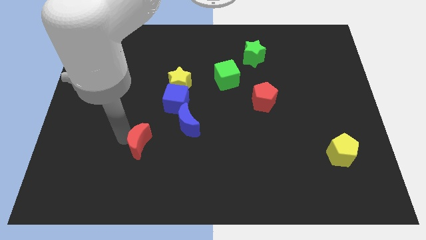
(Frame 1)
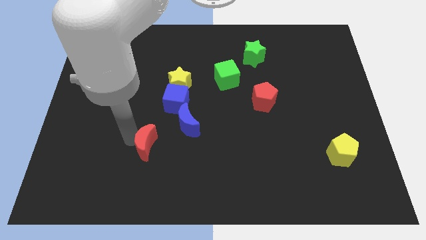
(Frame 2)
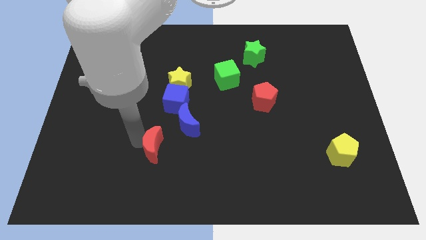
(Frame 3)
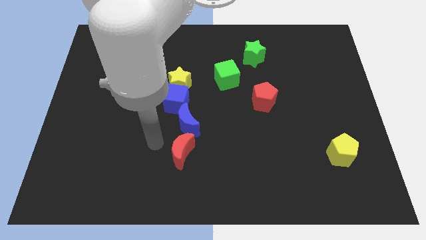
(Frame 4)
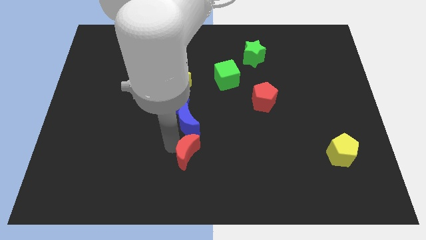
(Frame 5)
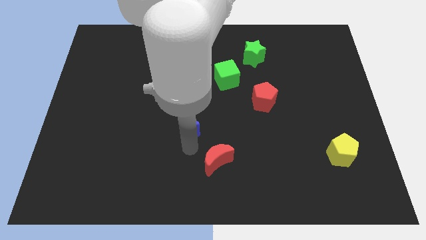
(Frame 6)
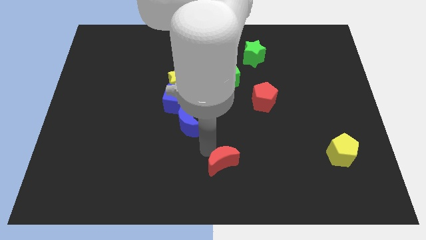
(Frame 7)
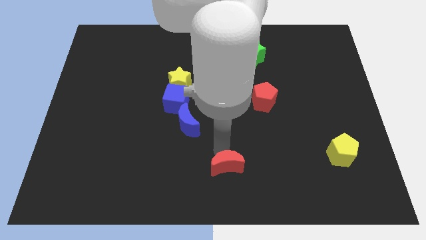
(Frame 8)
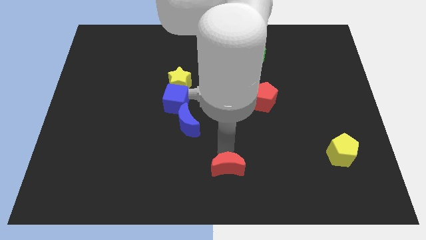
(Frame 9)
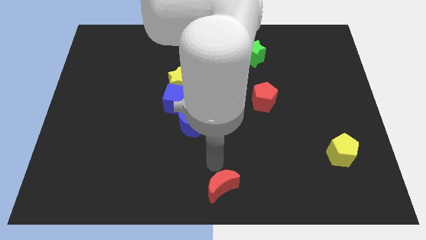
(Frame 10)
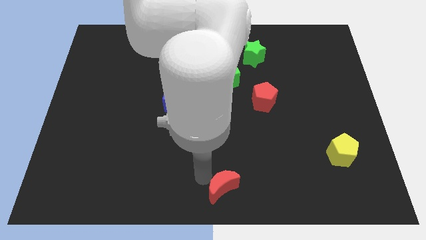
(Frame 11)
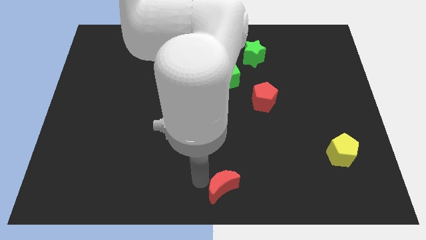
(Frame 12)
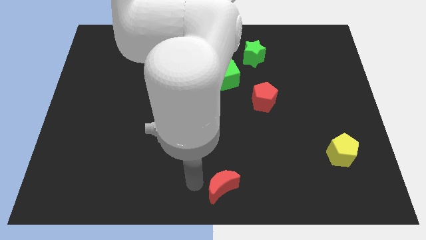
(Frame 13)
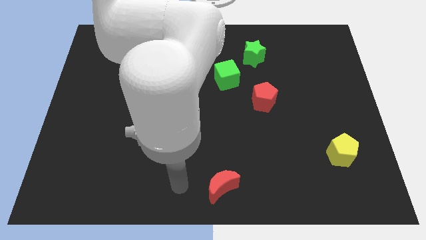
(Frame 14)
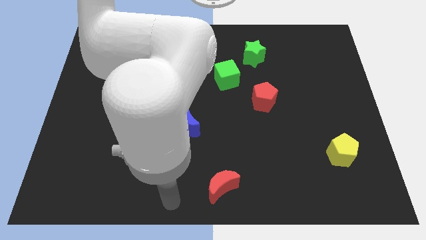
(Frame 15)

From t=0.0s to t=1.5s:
move the red crescent to the bottom of the board

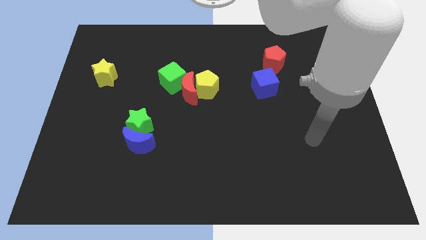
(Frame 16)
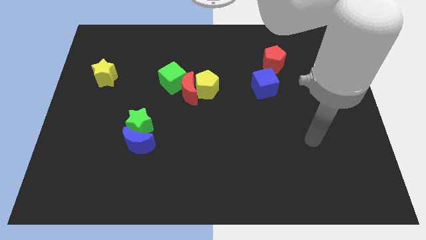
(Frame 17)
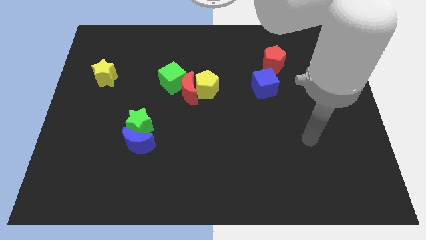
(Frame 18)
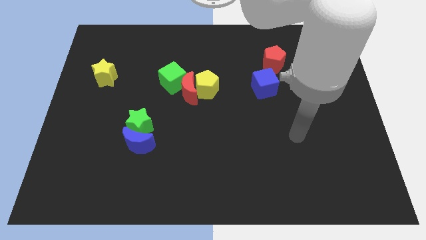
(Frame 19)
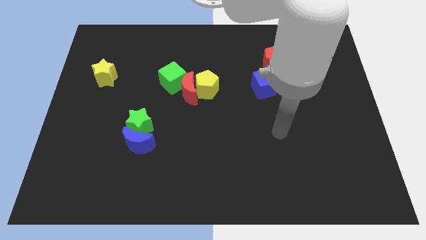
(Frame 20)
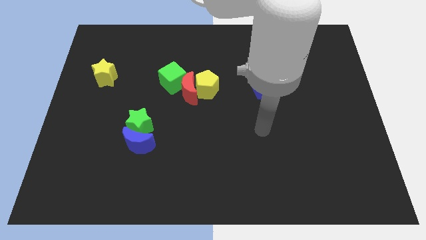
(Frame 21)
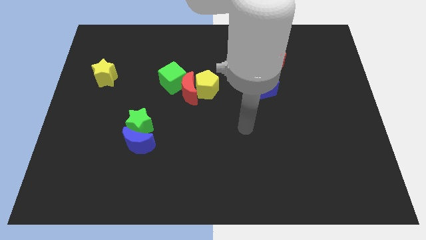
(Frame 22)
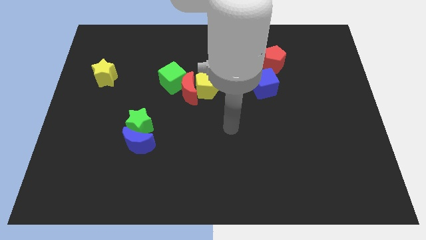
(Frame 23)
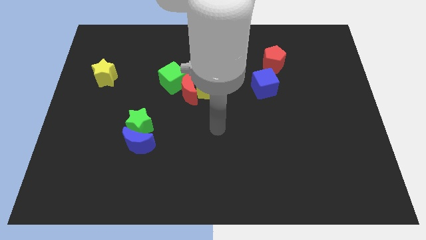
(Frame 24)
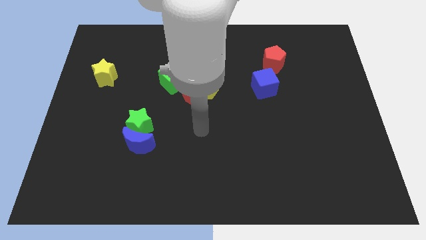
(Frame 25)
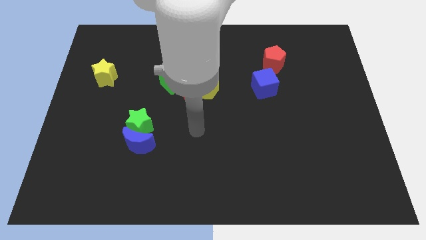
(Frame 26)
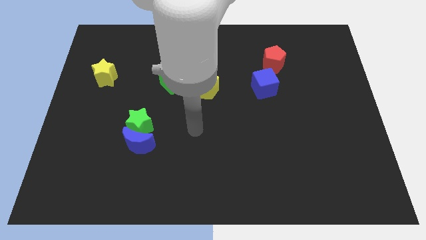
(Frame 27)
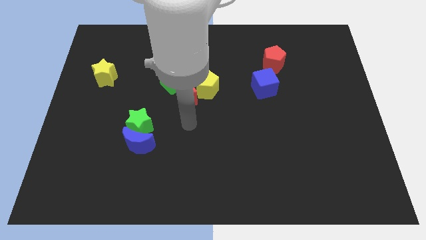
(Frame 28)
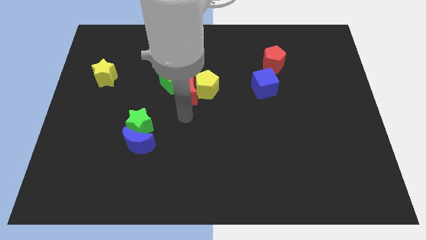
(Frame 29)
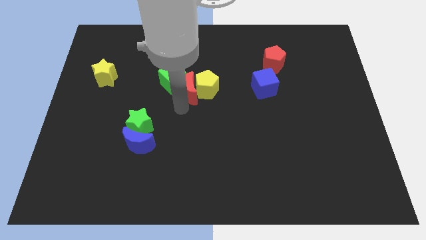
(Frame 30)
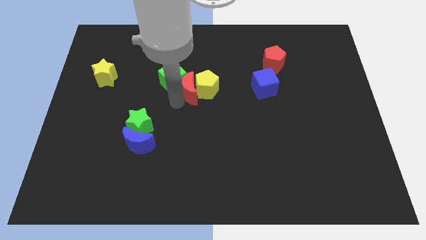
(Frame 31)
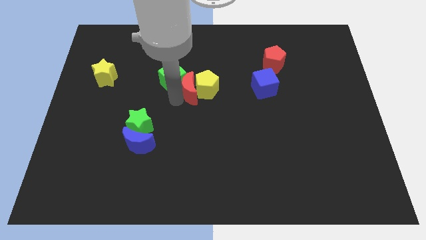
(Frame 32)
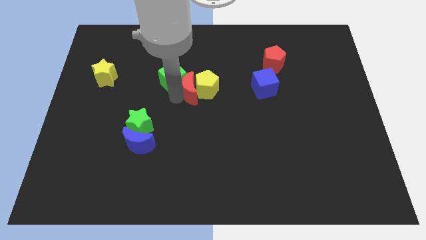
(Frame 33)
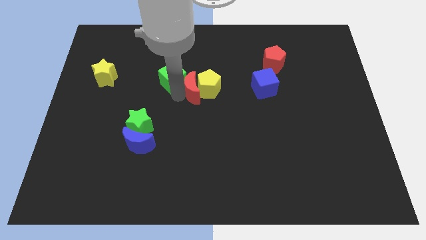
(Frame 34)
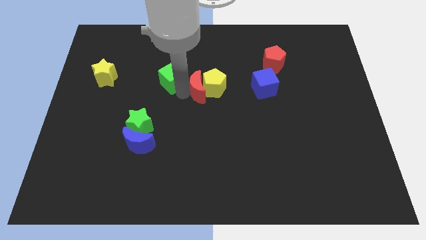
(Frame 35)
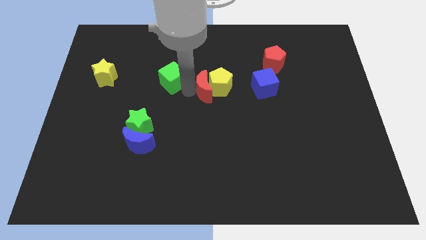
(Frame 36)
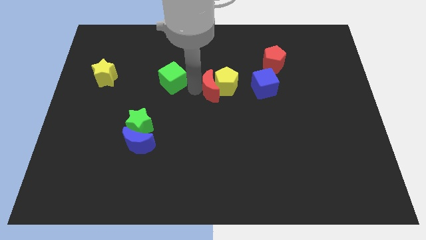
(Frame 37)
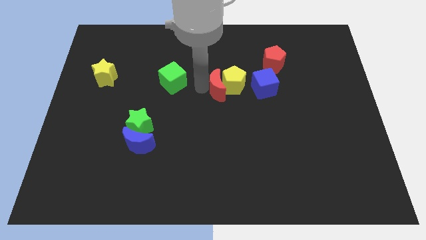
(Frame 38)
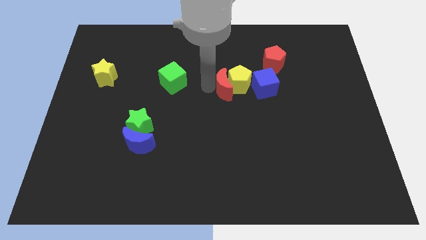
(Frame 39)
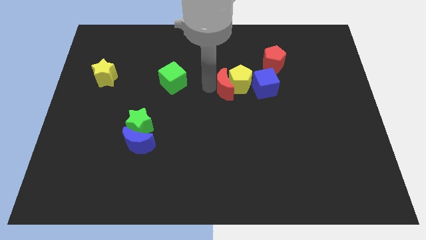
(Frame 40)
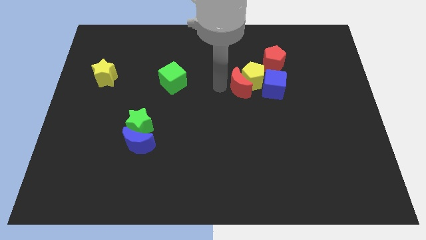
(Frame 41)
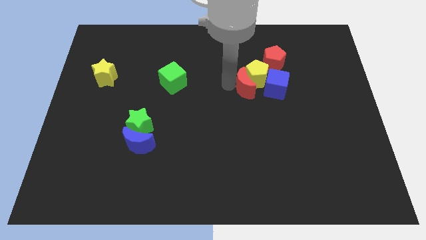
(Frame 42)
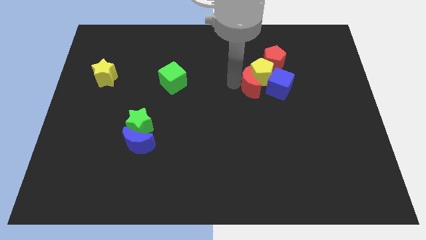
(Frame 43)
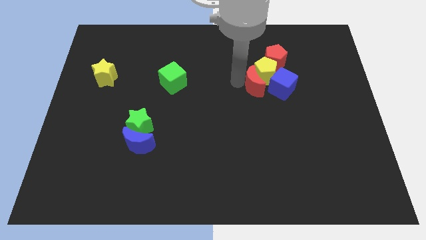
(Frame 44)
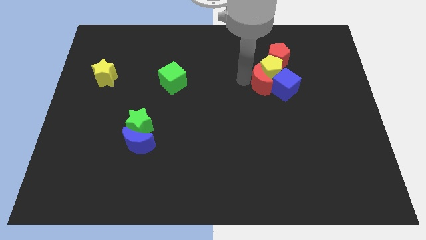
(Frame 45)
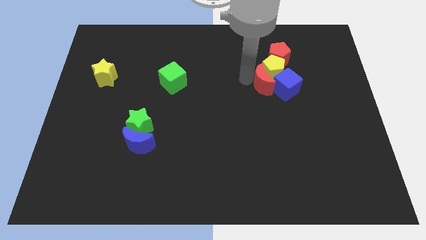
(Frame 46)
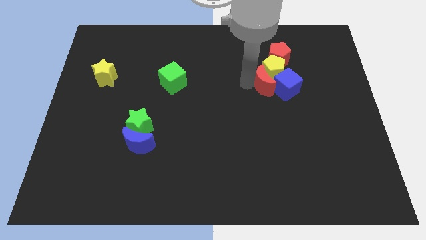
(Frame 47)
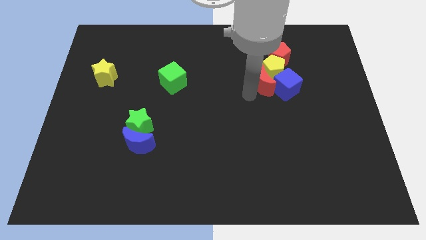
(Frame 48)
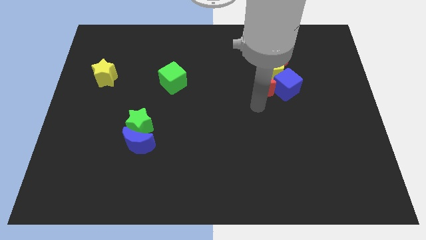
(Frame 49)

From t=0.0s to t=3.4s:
separate yellow pentagon and the red moon from the green cube

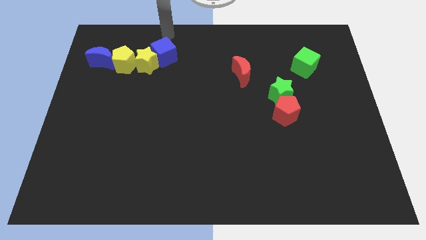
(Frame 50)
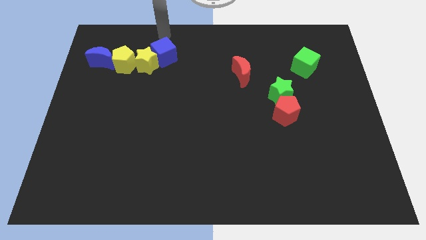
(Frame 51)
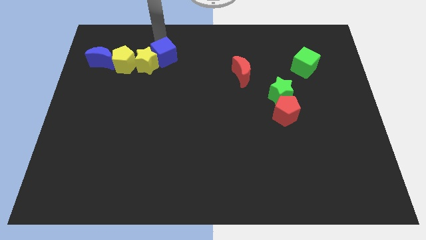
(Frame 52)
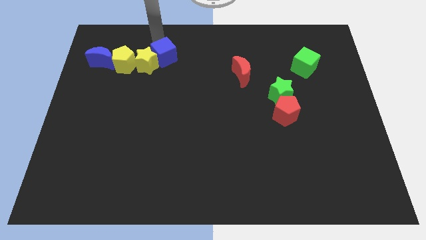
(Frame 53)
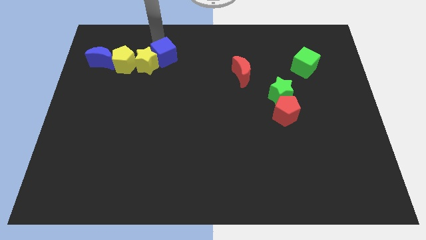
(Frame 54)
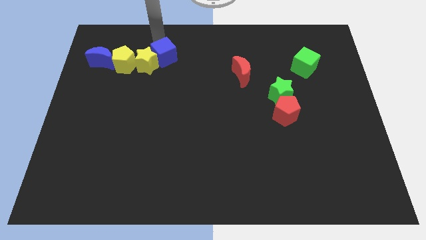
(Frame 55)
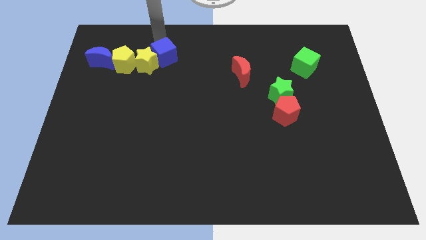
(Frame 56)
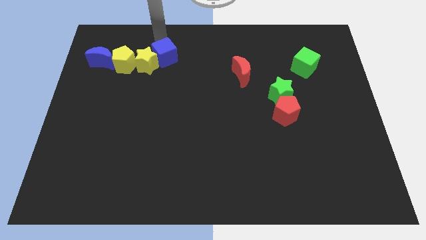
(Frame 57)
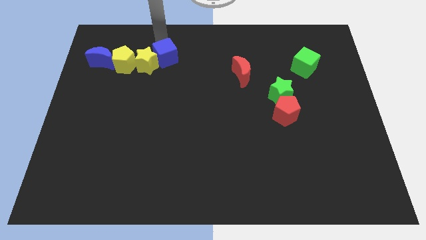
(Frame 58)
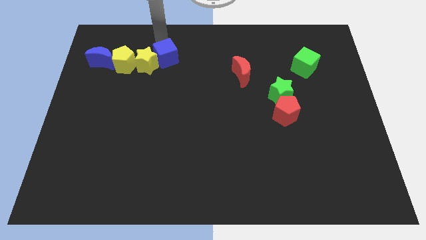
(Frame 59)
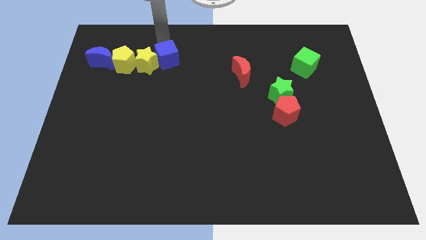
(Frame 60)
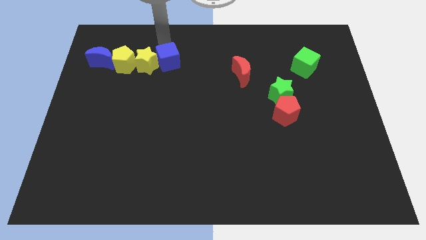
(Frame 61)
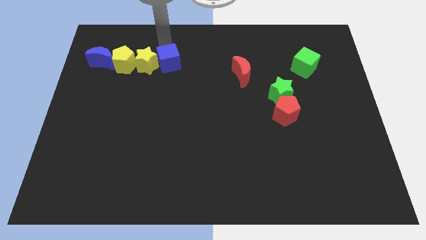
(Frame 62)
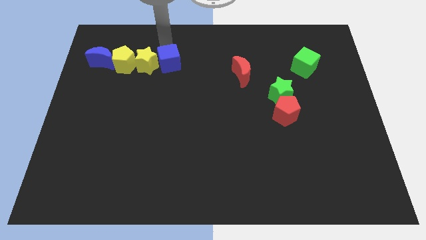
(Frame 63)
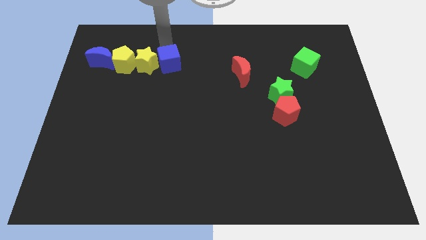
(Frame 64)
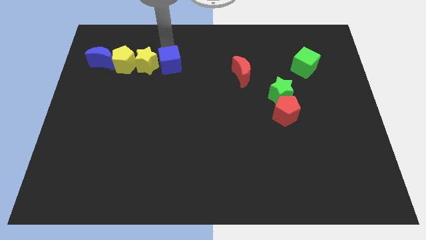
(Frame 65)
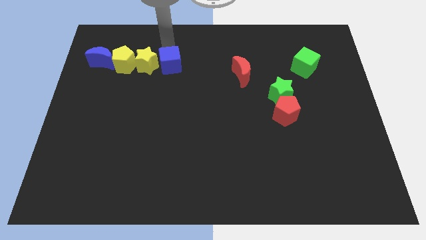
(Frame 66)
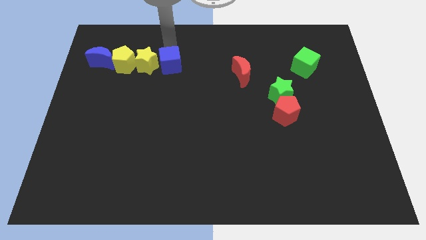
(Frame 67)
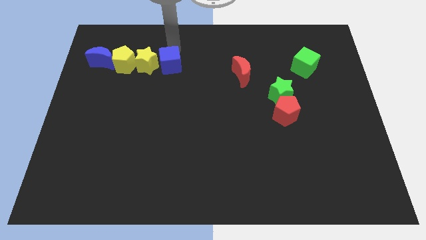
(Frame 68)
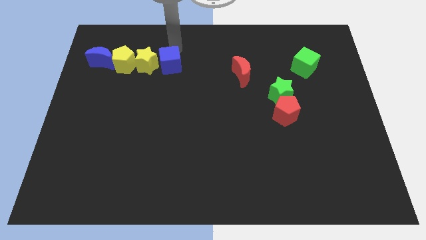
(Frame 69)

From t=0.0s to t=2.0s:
push the blue cube to the right of the yellow star

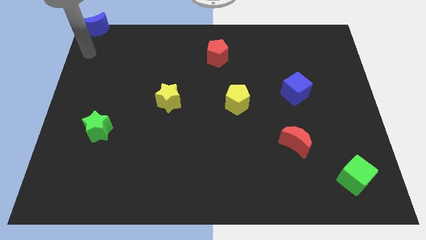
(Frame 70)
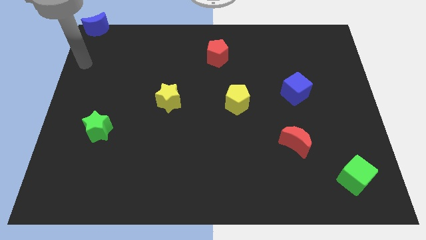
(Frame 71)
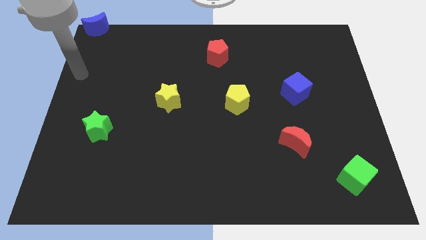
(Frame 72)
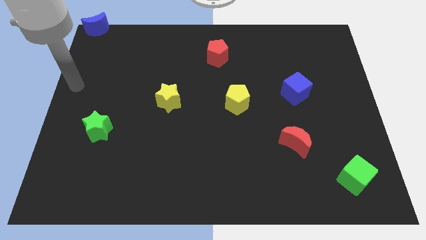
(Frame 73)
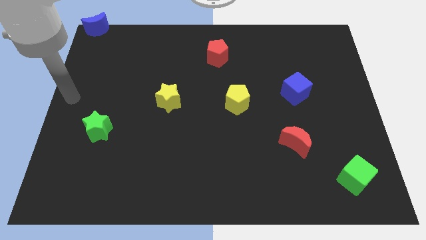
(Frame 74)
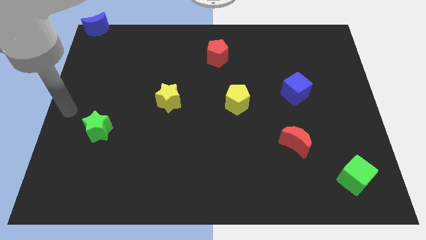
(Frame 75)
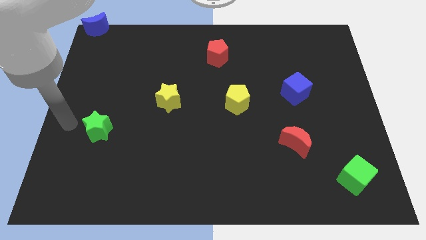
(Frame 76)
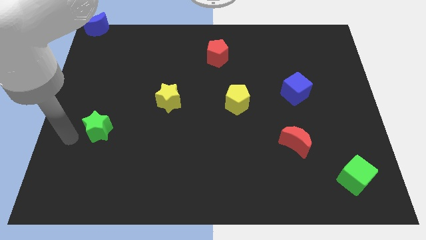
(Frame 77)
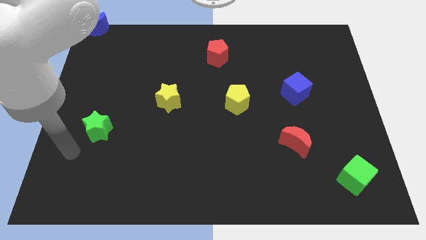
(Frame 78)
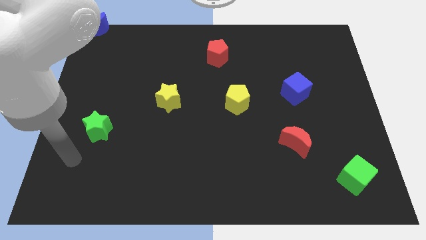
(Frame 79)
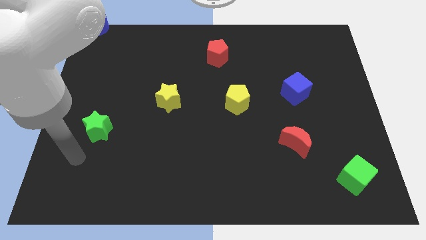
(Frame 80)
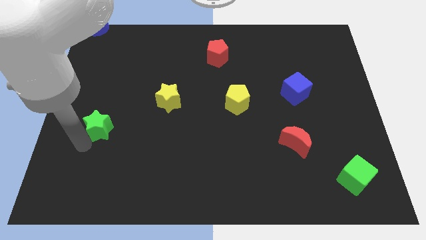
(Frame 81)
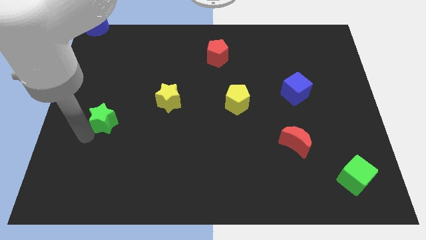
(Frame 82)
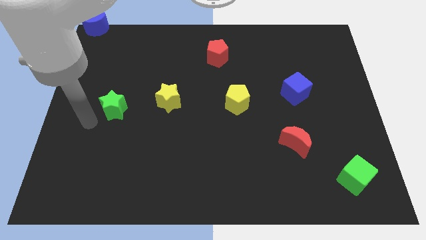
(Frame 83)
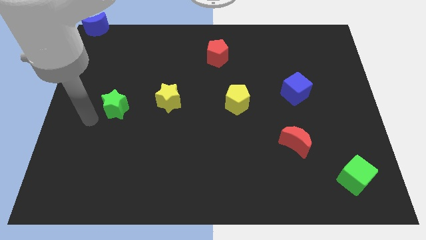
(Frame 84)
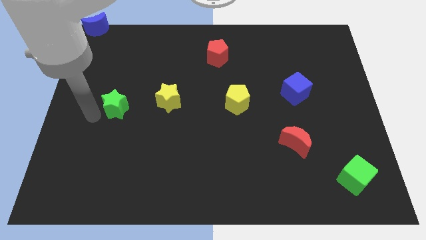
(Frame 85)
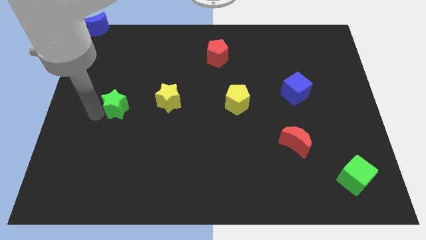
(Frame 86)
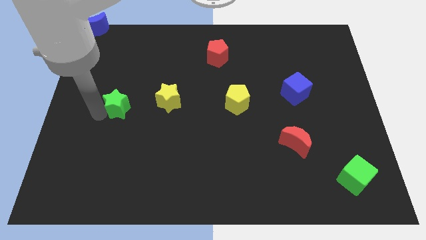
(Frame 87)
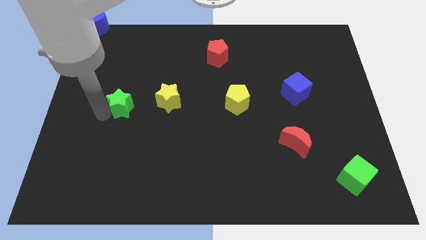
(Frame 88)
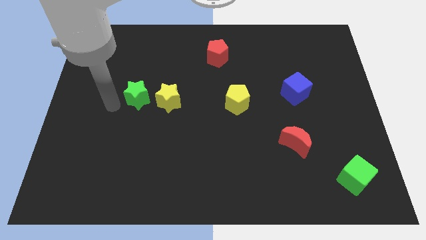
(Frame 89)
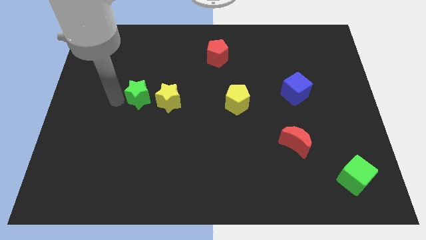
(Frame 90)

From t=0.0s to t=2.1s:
move the green star to the left of yellow star

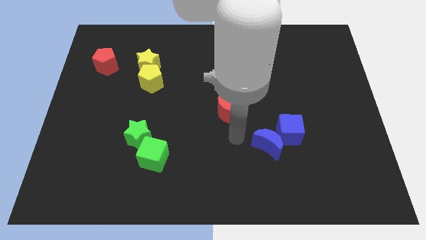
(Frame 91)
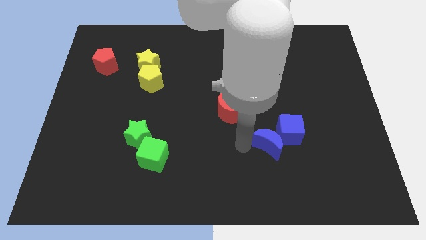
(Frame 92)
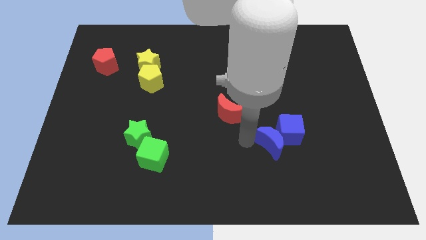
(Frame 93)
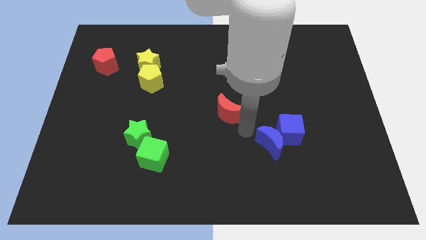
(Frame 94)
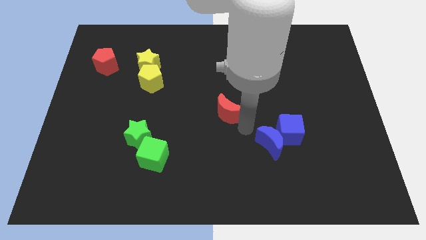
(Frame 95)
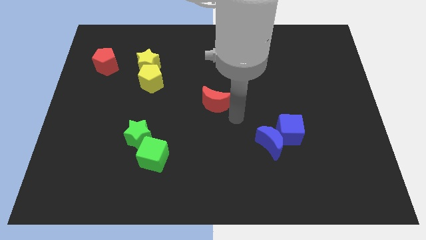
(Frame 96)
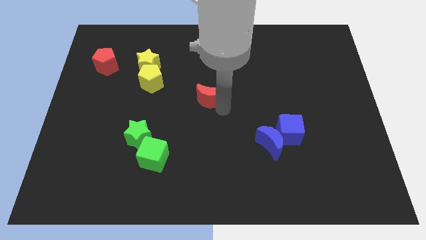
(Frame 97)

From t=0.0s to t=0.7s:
move the red crescent at the center of the board
